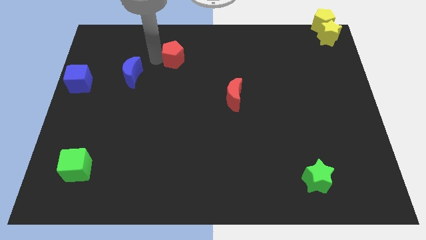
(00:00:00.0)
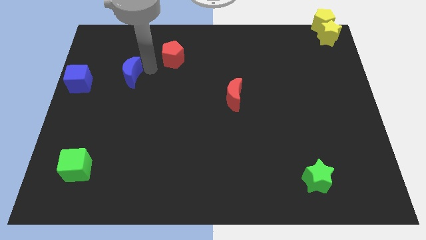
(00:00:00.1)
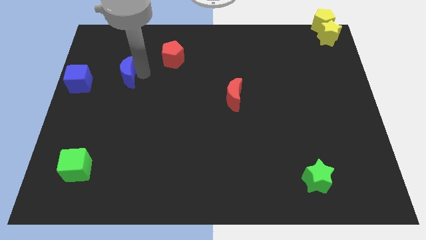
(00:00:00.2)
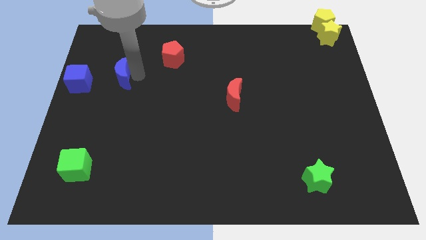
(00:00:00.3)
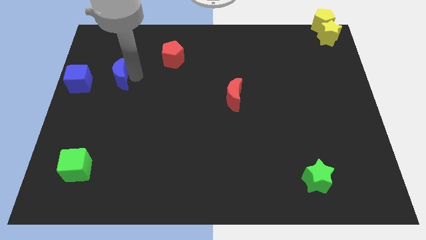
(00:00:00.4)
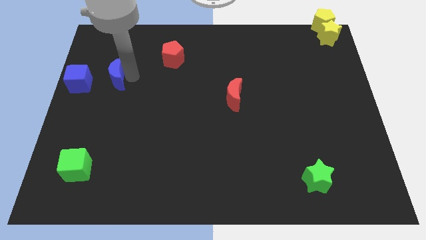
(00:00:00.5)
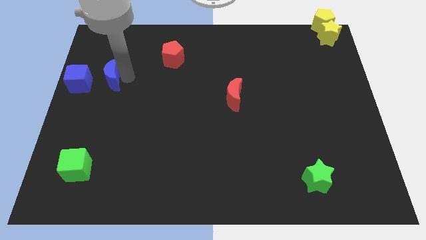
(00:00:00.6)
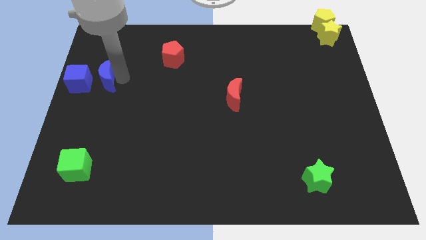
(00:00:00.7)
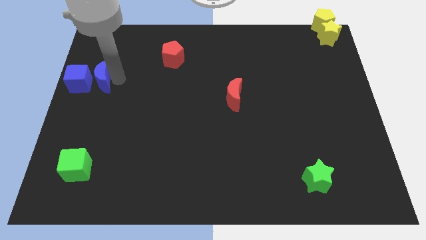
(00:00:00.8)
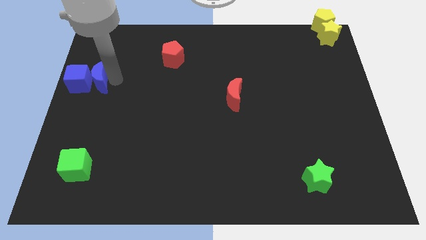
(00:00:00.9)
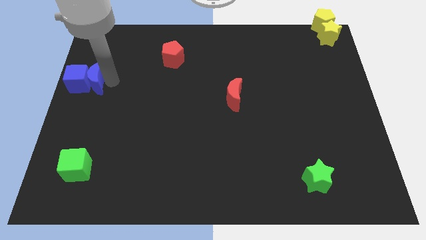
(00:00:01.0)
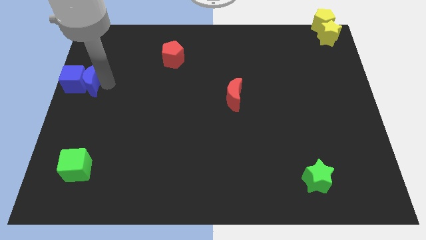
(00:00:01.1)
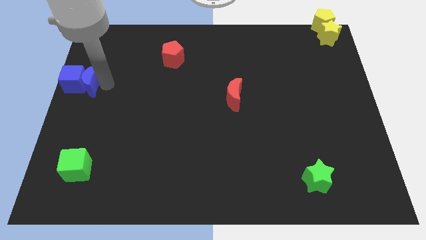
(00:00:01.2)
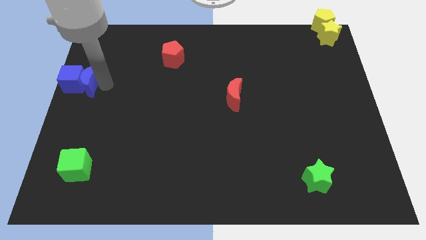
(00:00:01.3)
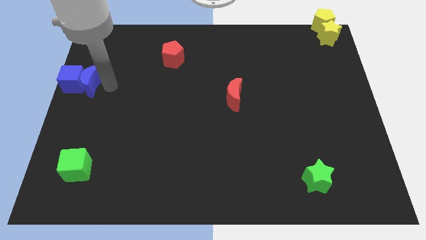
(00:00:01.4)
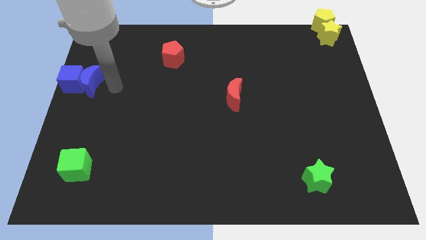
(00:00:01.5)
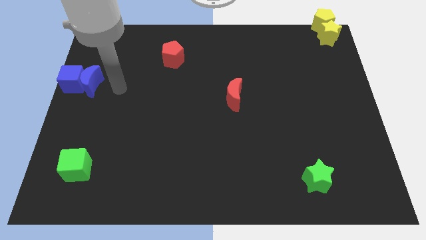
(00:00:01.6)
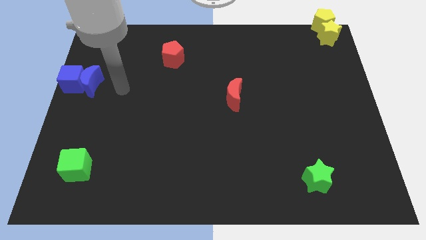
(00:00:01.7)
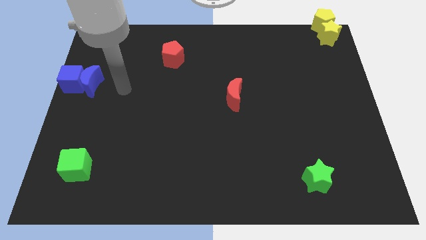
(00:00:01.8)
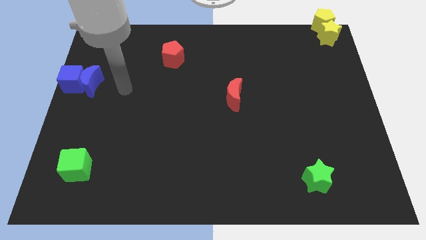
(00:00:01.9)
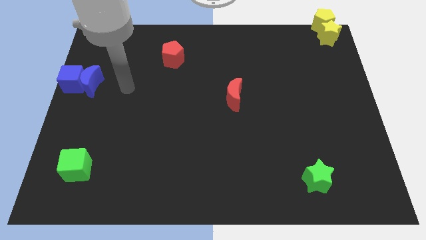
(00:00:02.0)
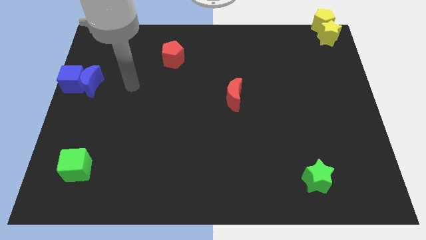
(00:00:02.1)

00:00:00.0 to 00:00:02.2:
move the blue moon into the blue cube

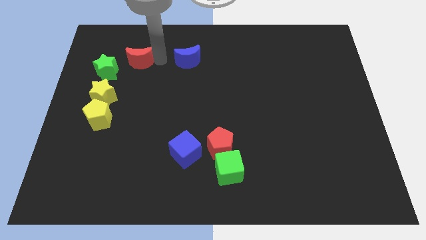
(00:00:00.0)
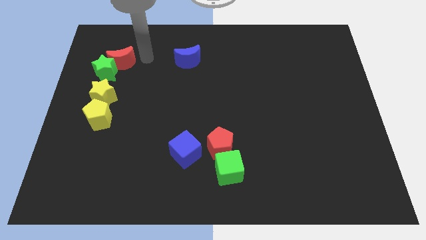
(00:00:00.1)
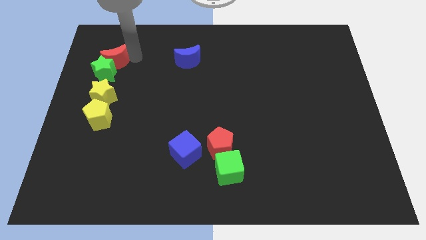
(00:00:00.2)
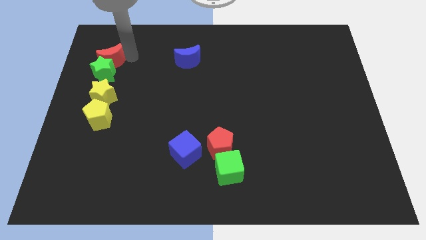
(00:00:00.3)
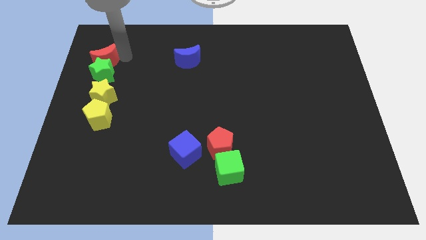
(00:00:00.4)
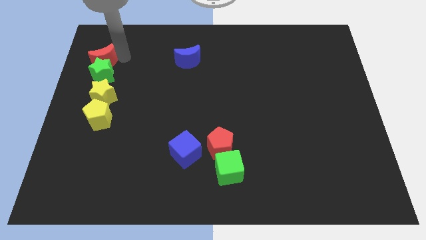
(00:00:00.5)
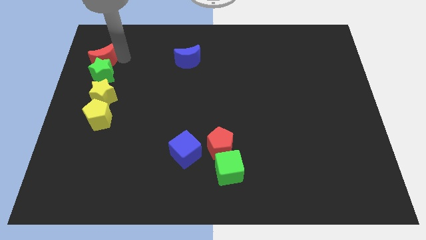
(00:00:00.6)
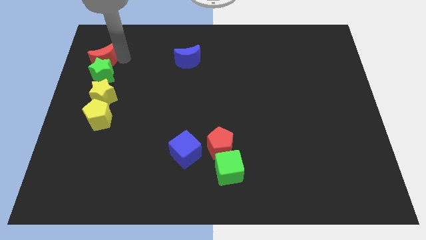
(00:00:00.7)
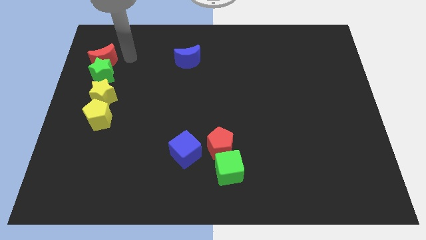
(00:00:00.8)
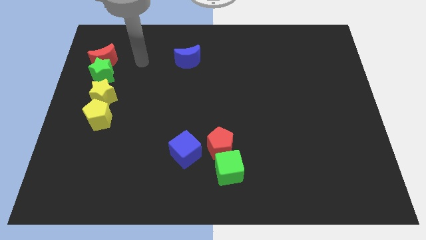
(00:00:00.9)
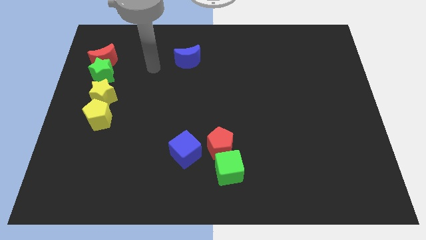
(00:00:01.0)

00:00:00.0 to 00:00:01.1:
push the red moon at the top of the green star

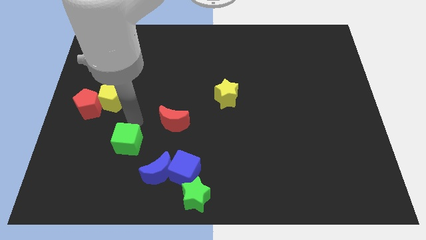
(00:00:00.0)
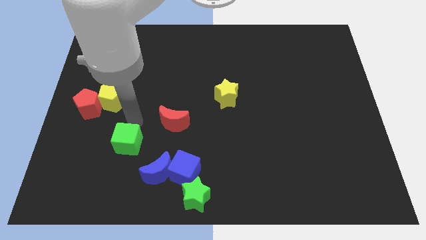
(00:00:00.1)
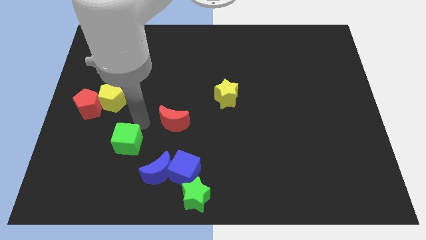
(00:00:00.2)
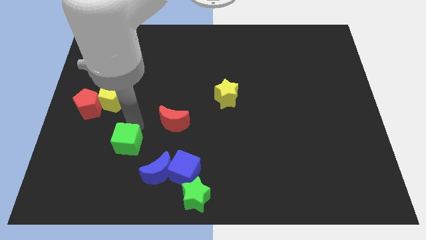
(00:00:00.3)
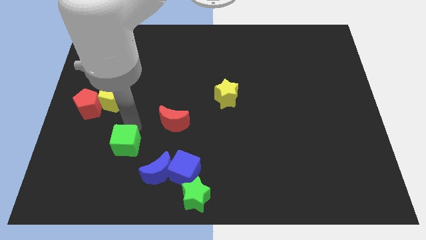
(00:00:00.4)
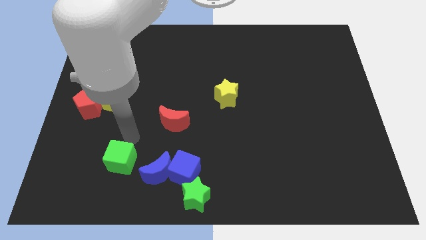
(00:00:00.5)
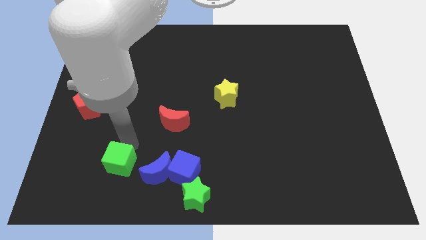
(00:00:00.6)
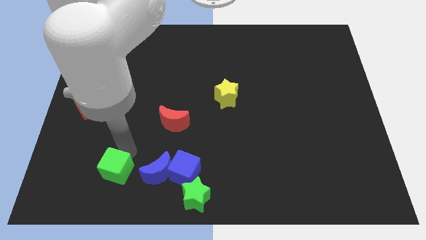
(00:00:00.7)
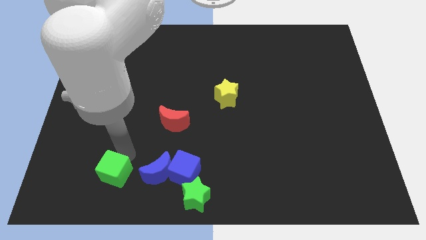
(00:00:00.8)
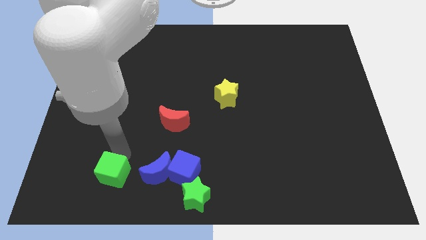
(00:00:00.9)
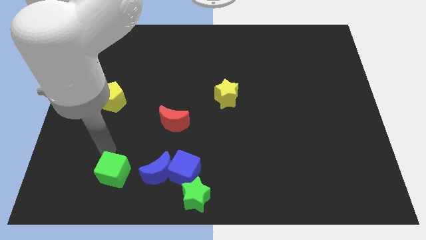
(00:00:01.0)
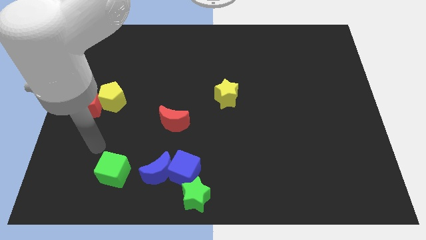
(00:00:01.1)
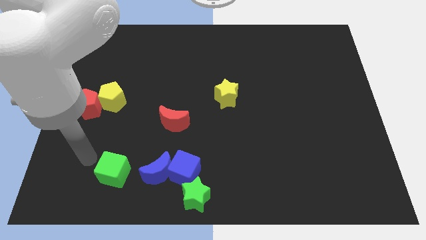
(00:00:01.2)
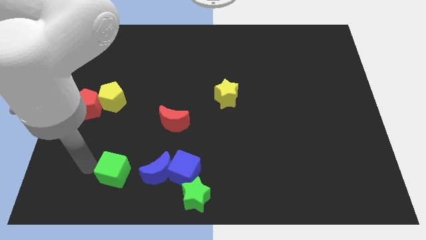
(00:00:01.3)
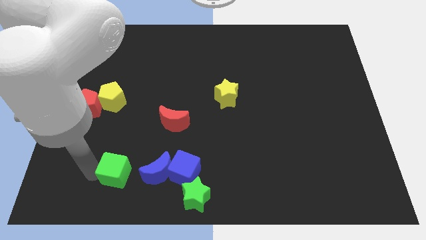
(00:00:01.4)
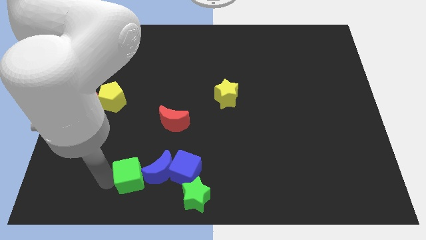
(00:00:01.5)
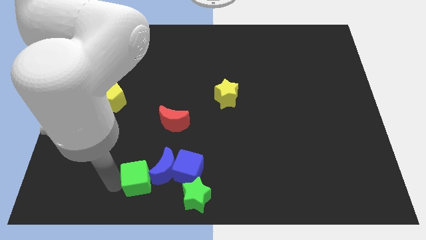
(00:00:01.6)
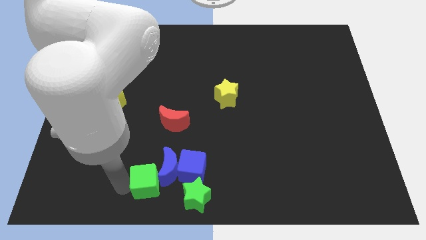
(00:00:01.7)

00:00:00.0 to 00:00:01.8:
push the green cube into the blue moon

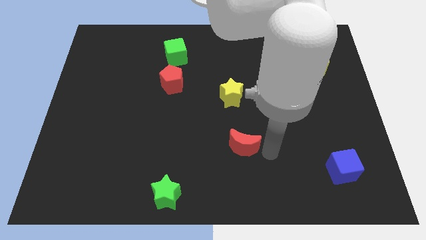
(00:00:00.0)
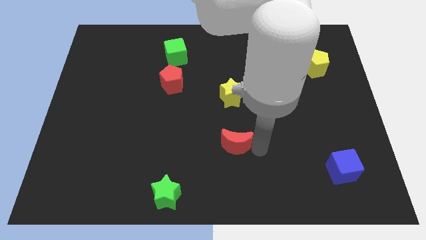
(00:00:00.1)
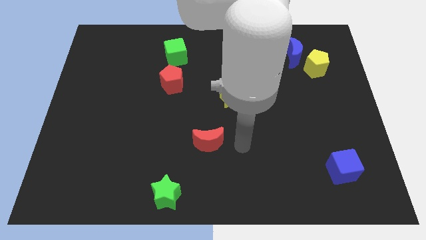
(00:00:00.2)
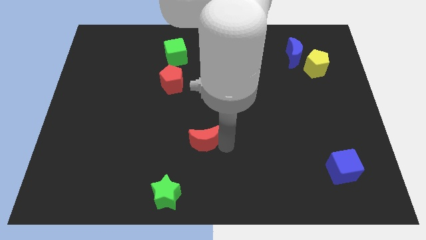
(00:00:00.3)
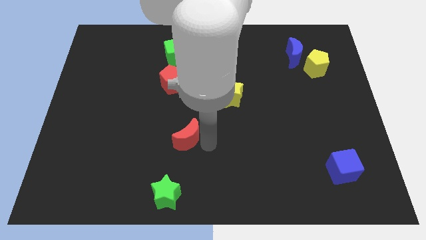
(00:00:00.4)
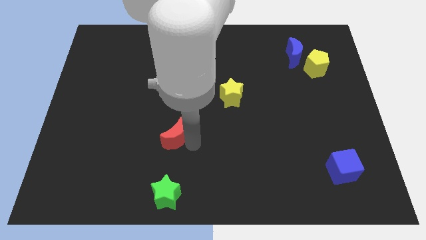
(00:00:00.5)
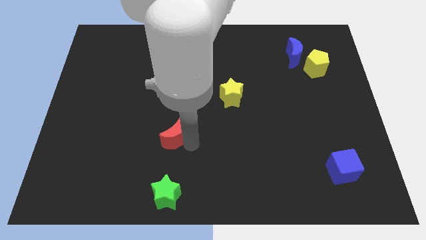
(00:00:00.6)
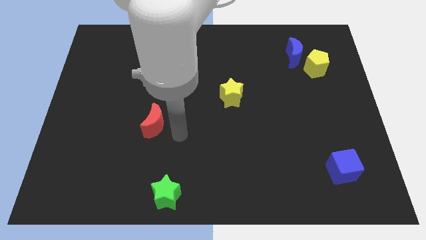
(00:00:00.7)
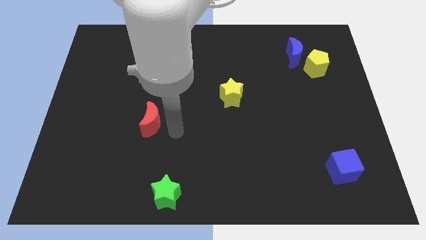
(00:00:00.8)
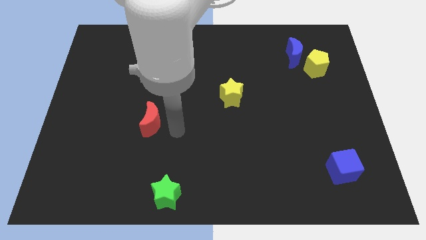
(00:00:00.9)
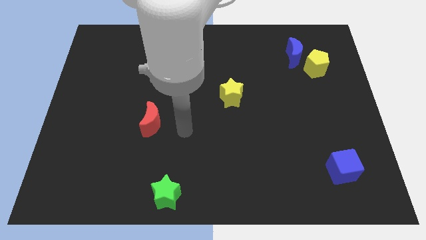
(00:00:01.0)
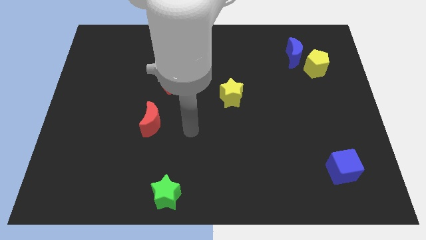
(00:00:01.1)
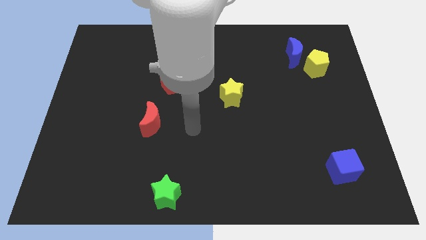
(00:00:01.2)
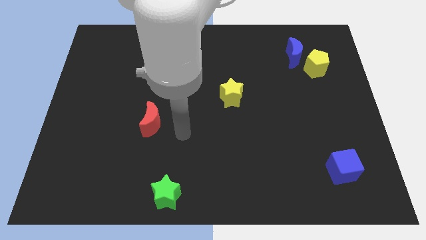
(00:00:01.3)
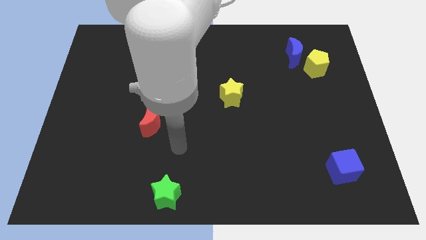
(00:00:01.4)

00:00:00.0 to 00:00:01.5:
push the red crescent to the left of the board

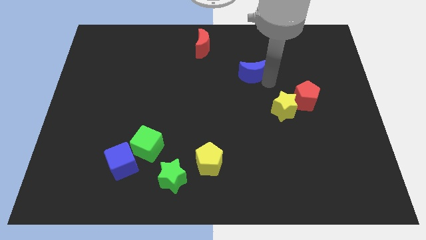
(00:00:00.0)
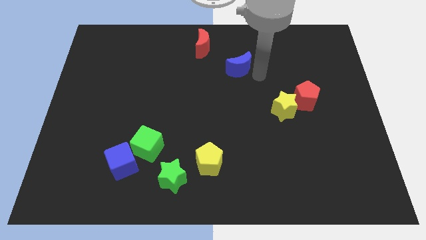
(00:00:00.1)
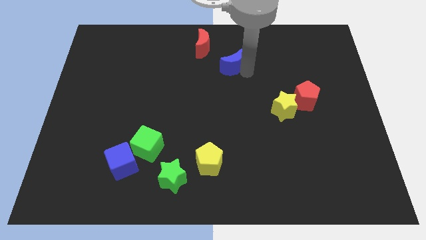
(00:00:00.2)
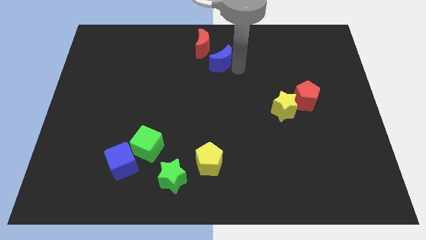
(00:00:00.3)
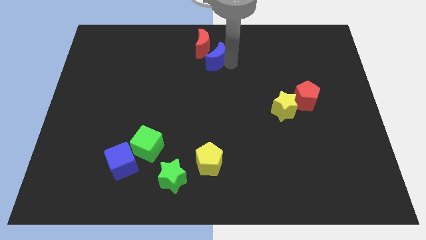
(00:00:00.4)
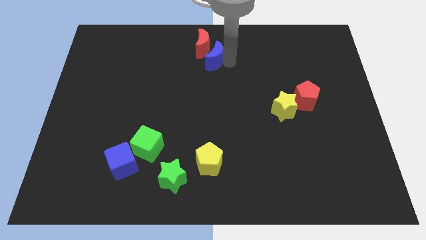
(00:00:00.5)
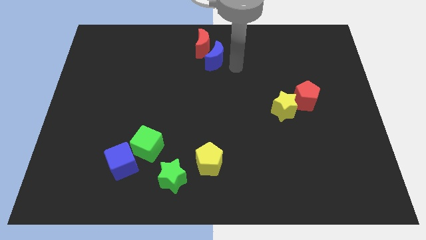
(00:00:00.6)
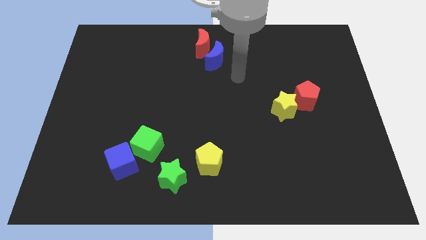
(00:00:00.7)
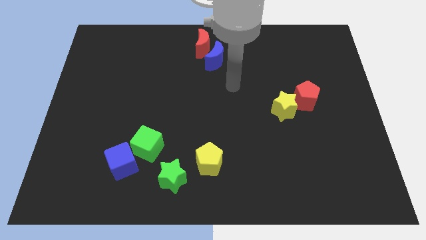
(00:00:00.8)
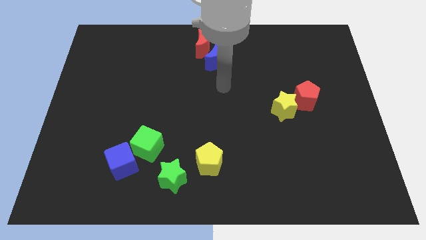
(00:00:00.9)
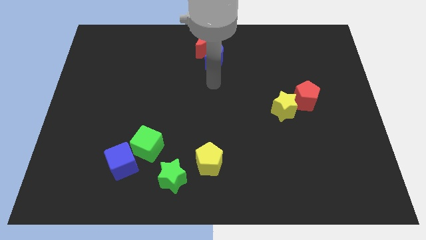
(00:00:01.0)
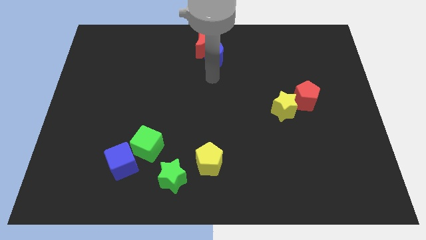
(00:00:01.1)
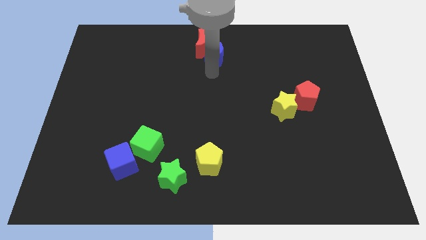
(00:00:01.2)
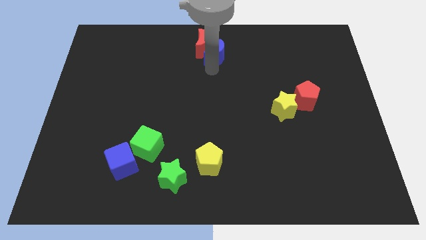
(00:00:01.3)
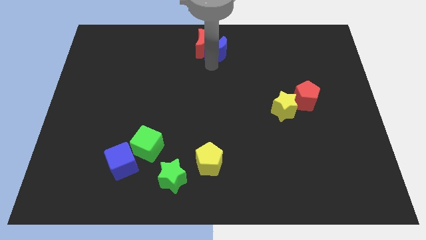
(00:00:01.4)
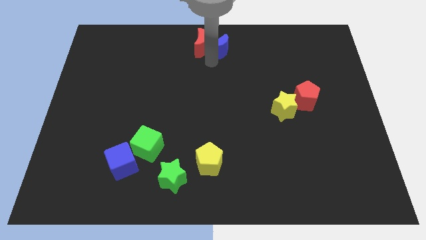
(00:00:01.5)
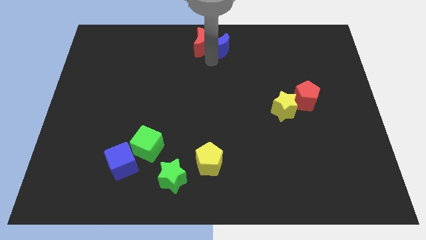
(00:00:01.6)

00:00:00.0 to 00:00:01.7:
place the blue moon to the right side of red moon

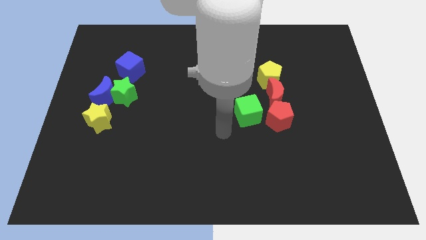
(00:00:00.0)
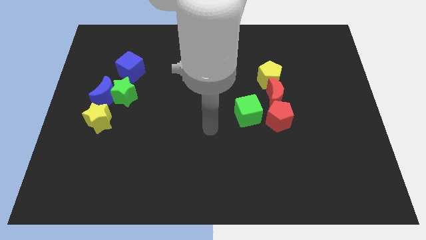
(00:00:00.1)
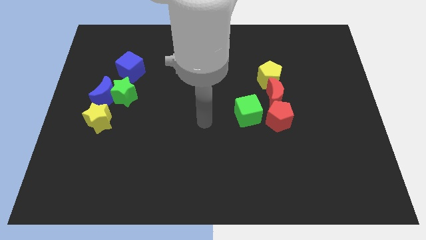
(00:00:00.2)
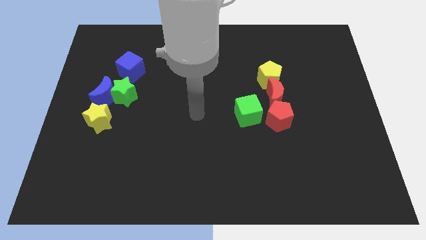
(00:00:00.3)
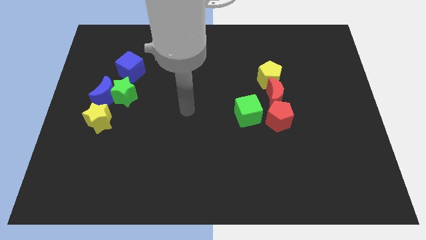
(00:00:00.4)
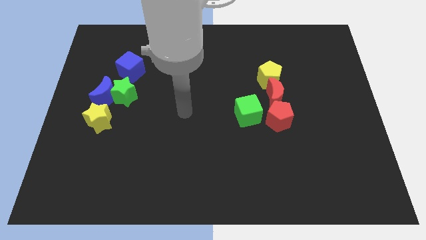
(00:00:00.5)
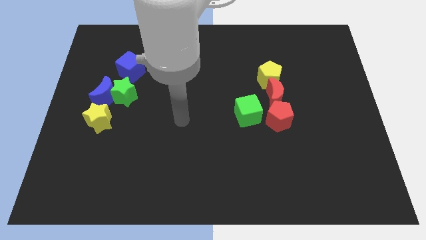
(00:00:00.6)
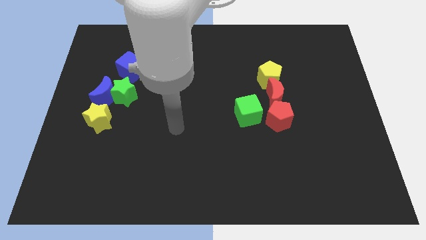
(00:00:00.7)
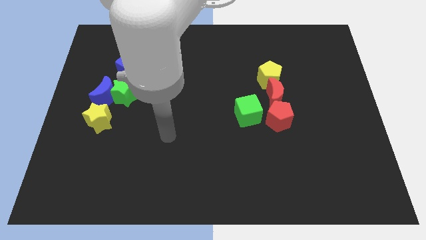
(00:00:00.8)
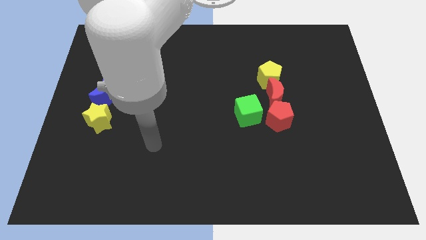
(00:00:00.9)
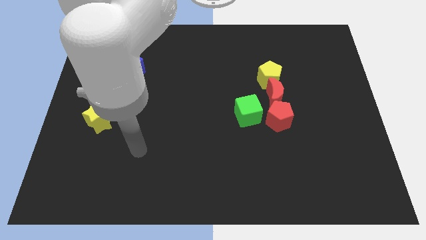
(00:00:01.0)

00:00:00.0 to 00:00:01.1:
move your arm away from green cube
